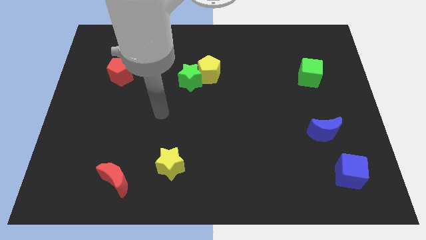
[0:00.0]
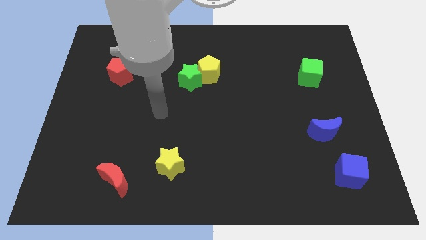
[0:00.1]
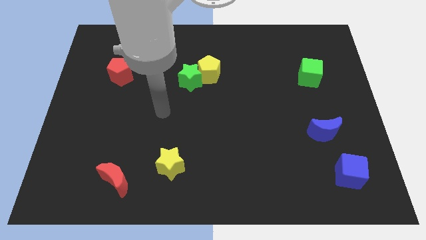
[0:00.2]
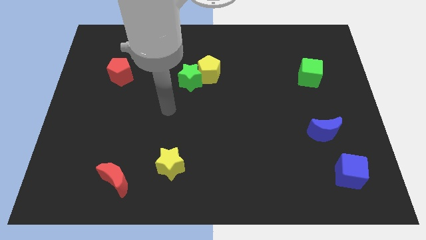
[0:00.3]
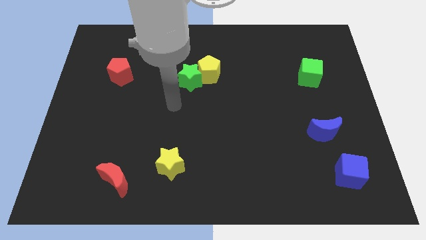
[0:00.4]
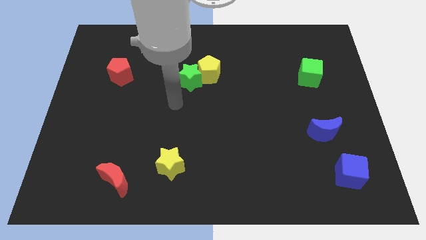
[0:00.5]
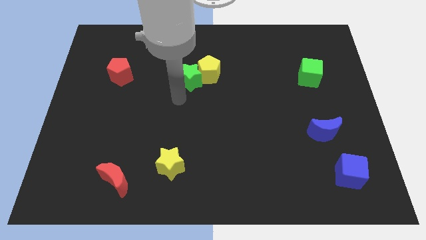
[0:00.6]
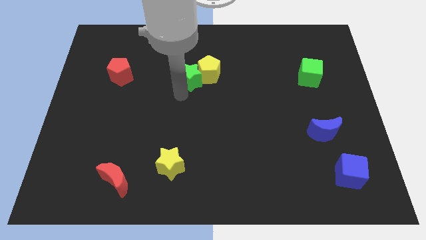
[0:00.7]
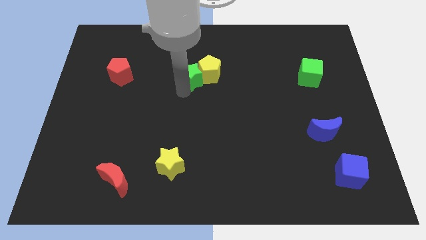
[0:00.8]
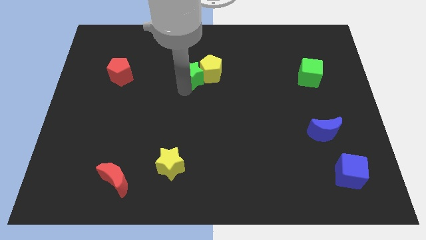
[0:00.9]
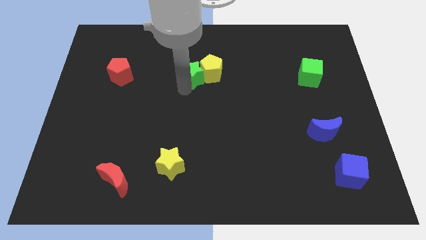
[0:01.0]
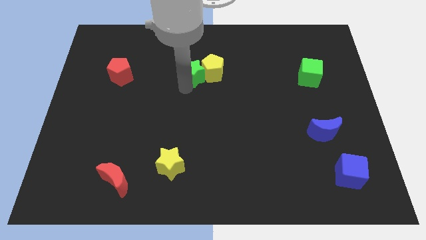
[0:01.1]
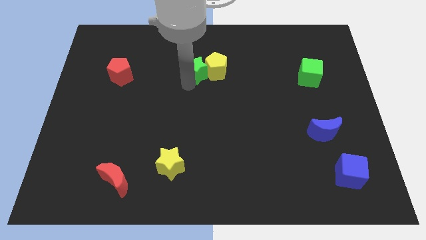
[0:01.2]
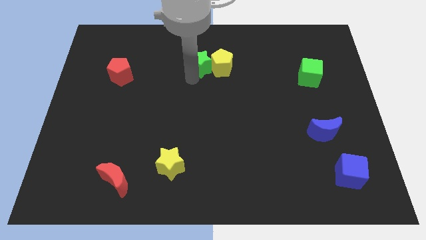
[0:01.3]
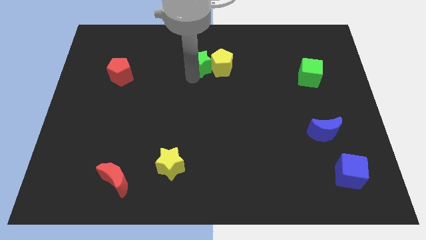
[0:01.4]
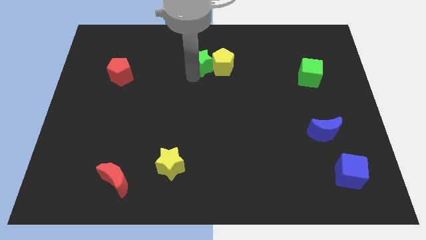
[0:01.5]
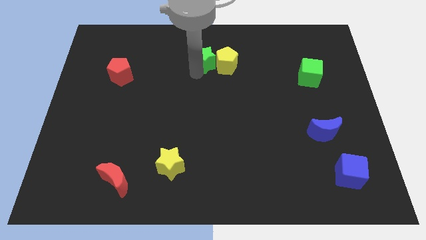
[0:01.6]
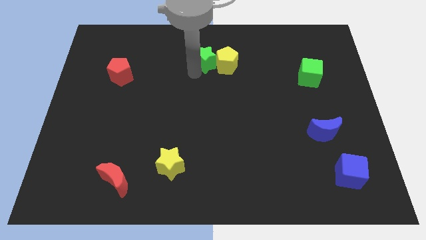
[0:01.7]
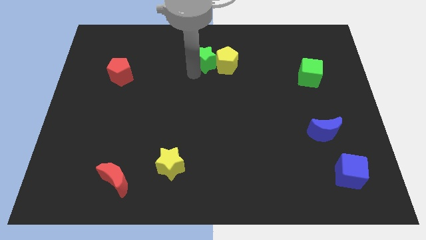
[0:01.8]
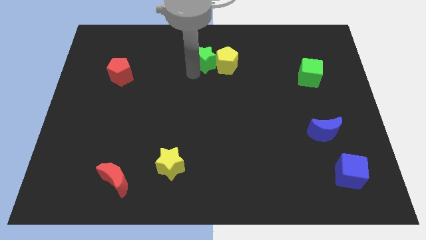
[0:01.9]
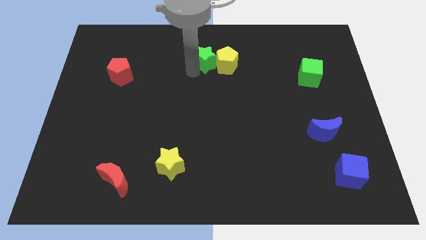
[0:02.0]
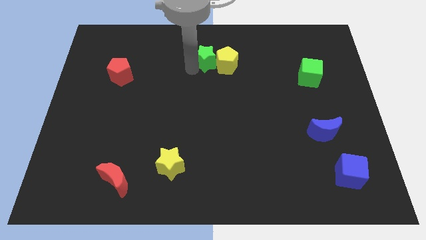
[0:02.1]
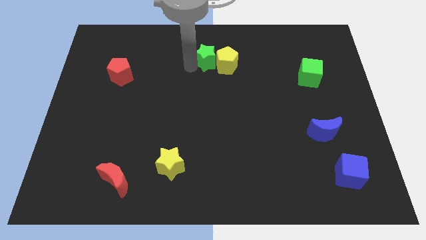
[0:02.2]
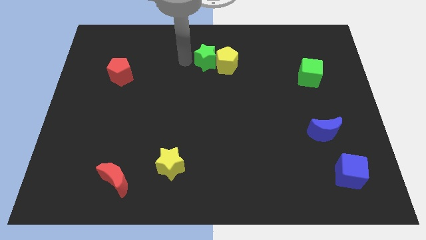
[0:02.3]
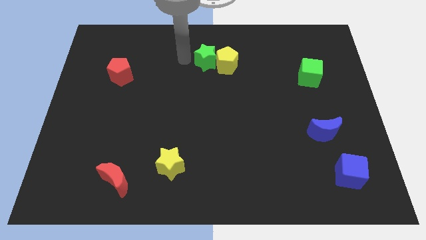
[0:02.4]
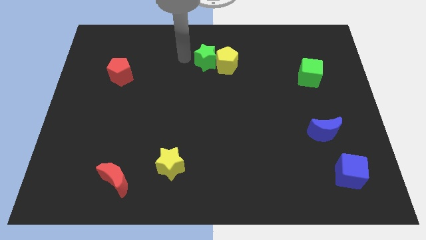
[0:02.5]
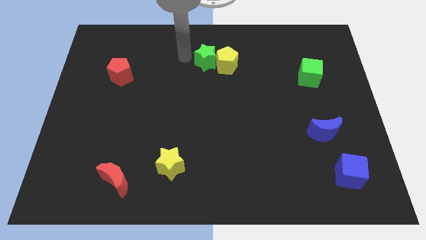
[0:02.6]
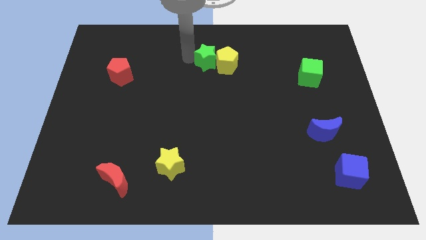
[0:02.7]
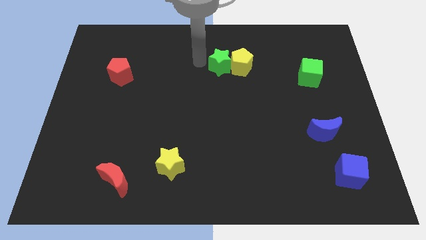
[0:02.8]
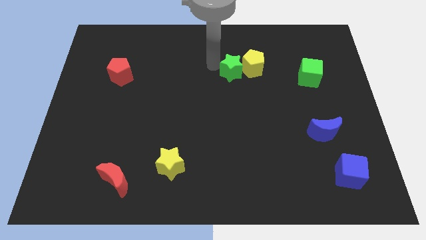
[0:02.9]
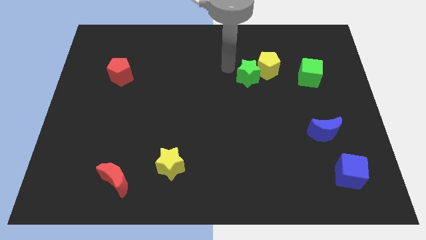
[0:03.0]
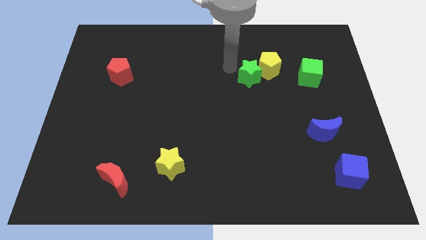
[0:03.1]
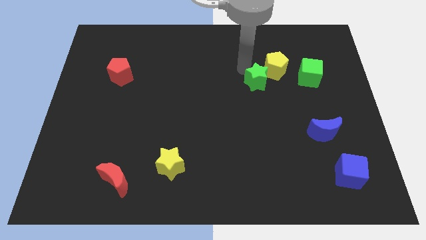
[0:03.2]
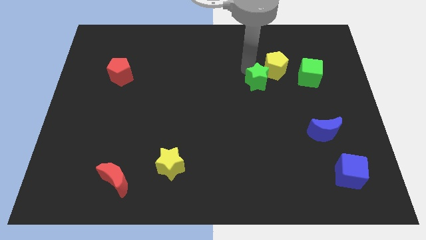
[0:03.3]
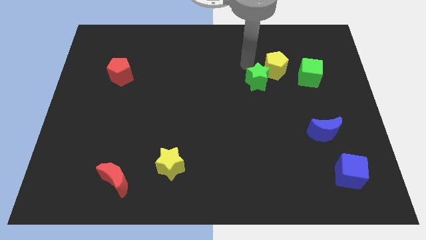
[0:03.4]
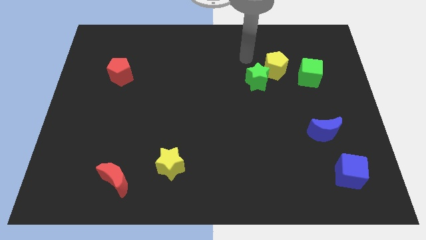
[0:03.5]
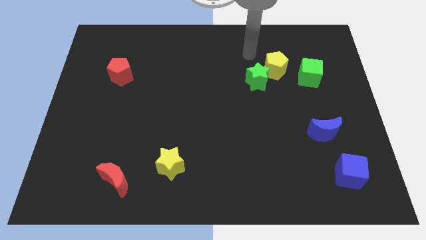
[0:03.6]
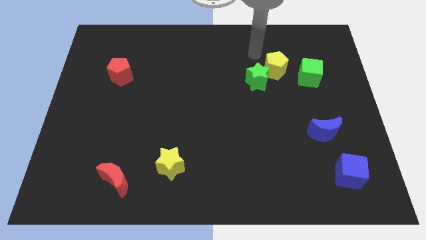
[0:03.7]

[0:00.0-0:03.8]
push the yellow pentagon and green star to the left of the green cube

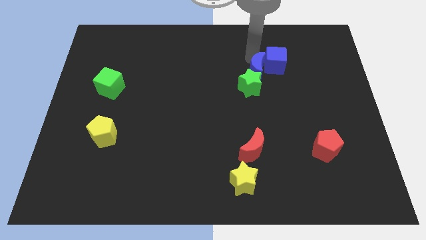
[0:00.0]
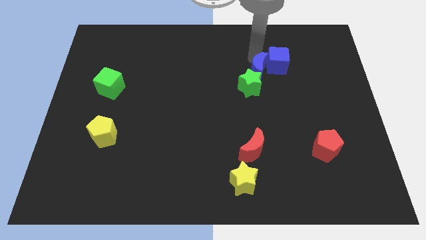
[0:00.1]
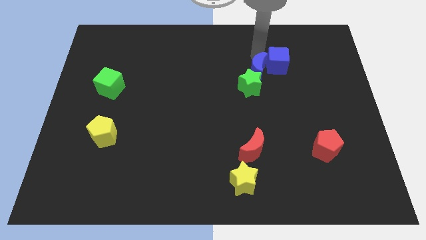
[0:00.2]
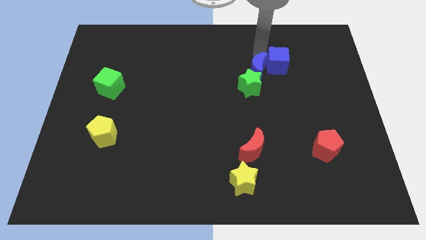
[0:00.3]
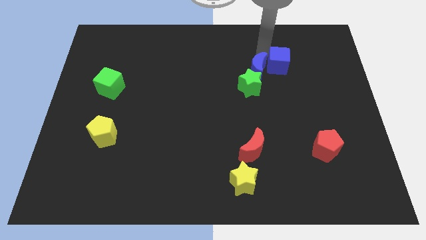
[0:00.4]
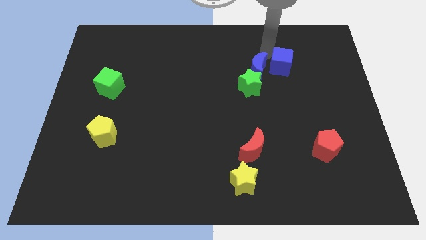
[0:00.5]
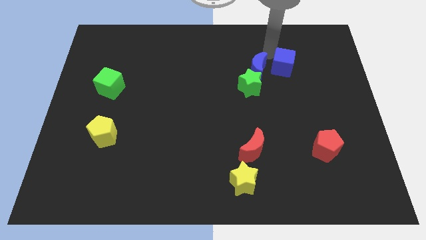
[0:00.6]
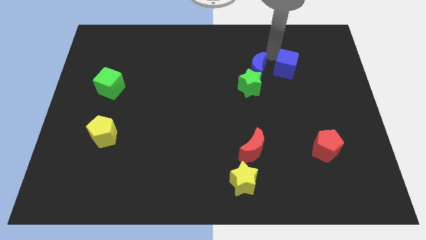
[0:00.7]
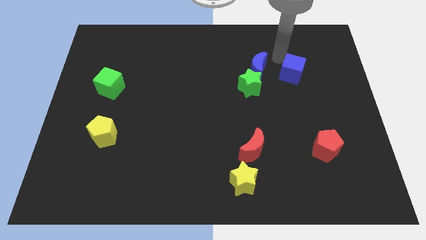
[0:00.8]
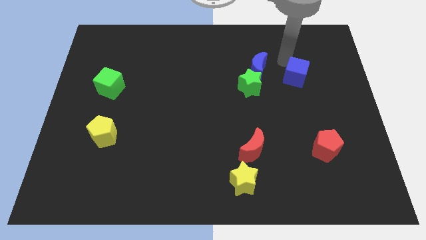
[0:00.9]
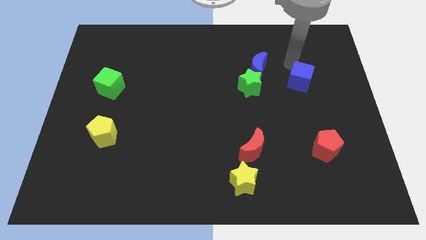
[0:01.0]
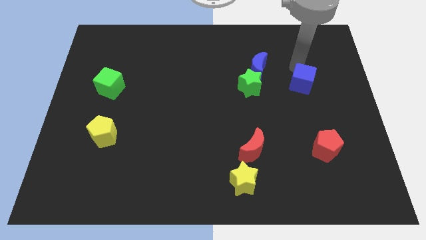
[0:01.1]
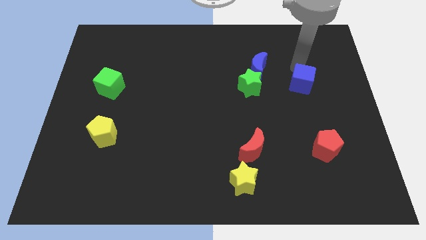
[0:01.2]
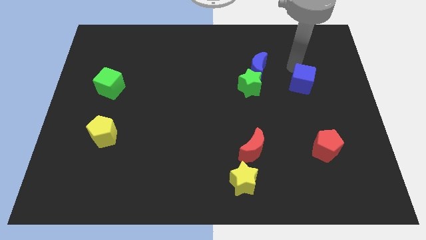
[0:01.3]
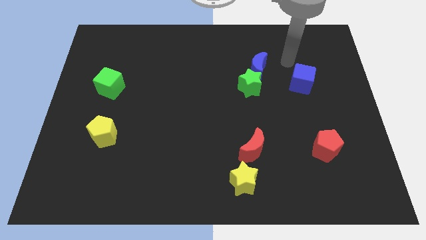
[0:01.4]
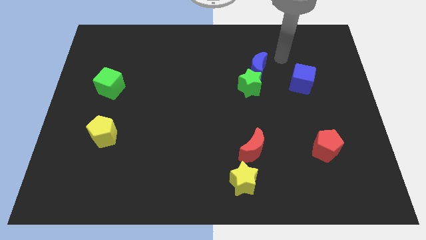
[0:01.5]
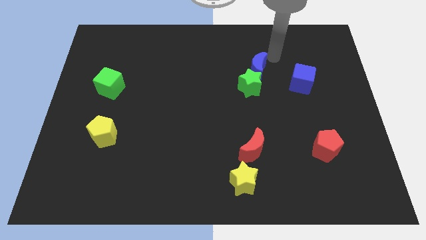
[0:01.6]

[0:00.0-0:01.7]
separate the blue cube from the blue crescent

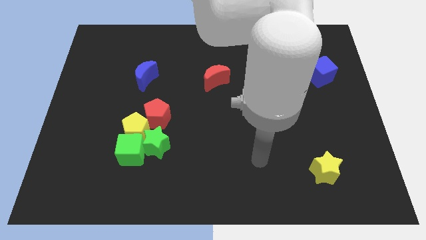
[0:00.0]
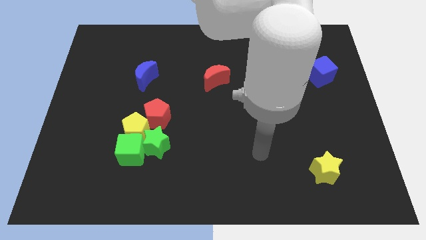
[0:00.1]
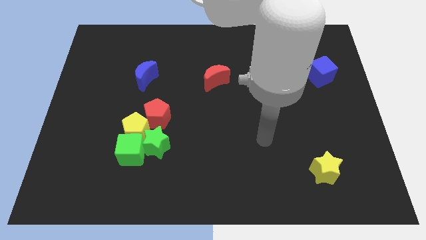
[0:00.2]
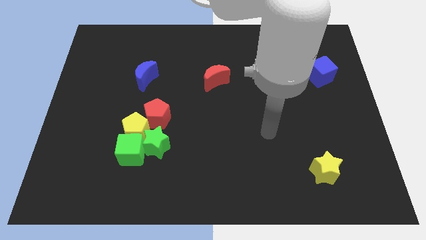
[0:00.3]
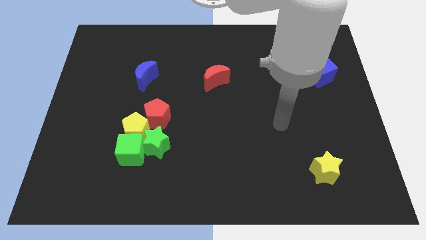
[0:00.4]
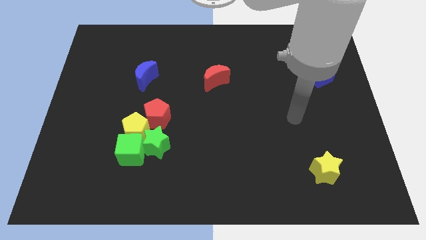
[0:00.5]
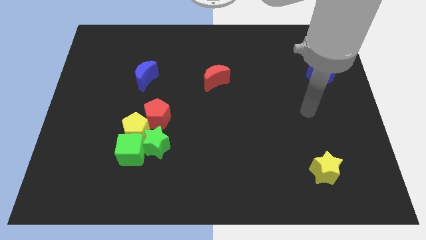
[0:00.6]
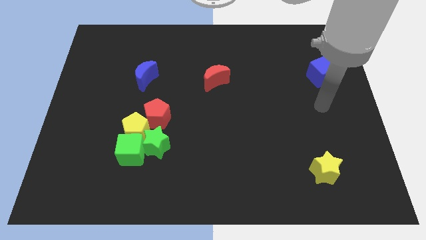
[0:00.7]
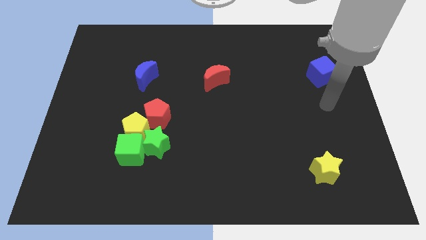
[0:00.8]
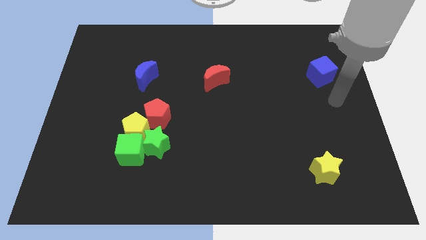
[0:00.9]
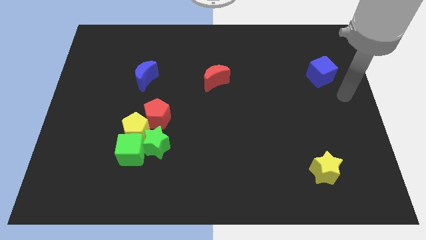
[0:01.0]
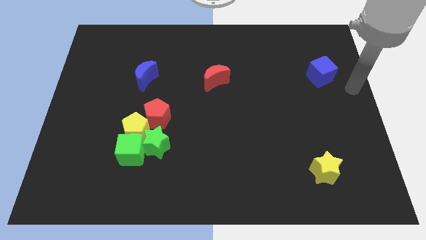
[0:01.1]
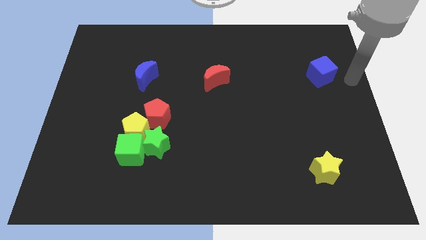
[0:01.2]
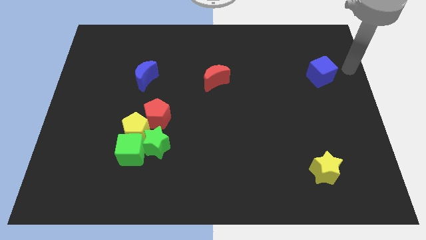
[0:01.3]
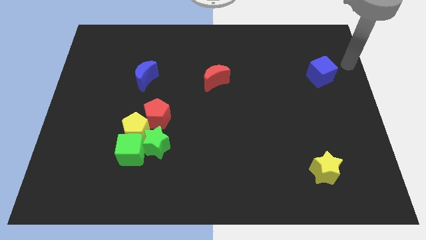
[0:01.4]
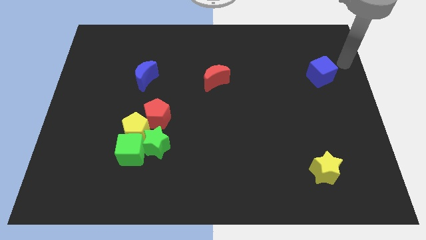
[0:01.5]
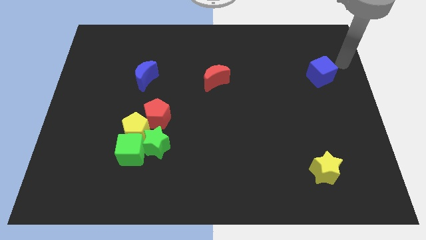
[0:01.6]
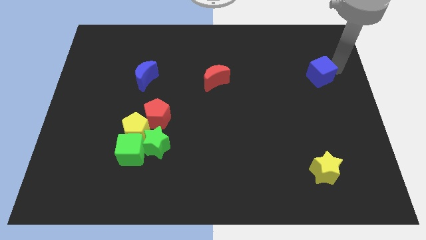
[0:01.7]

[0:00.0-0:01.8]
move your arm towards the blue cube

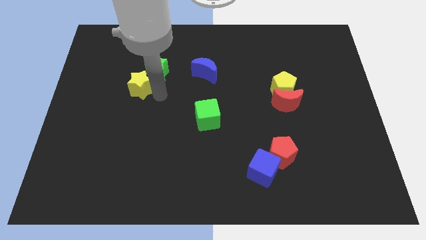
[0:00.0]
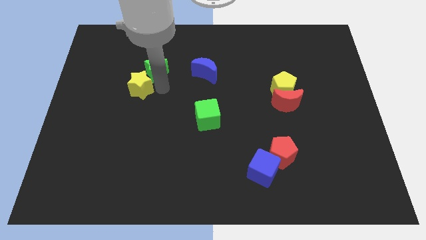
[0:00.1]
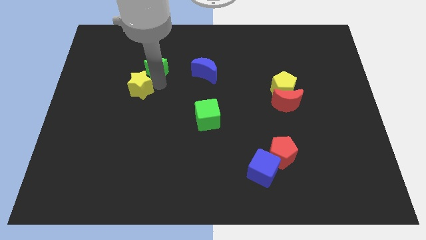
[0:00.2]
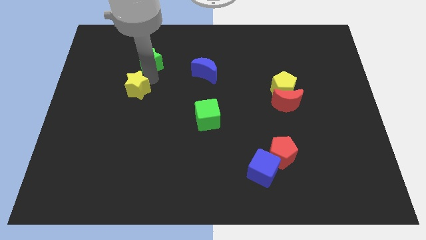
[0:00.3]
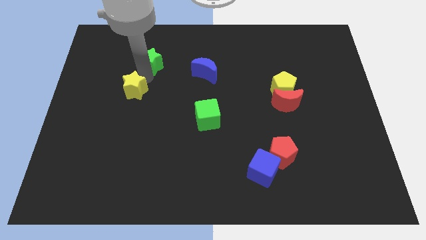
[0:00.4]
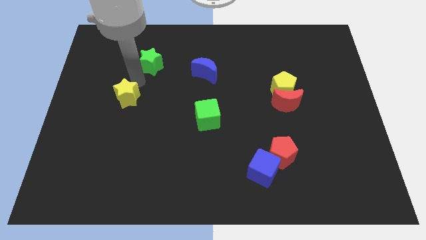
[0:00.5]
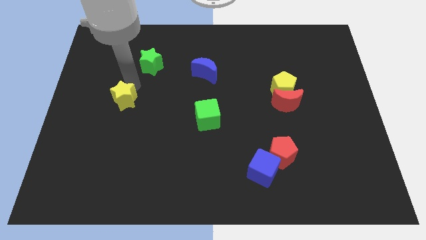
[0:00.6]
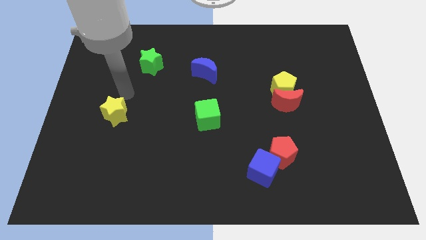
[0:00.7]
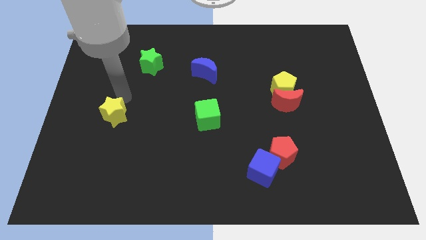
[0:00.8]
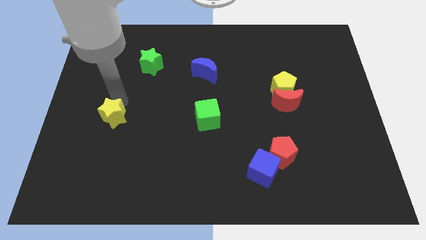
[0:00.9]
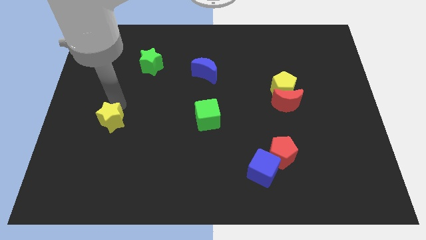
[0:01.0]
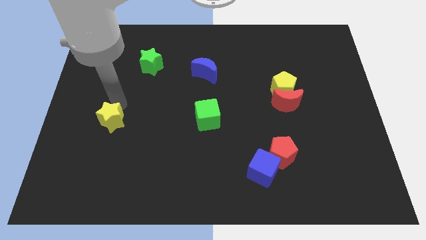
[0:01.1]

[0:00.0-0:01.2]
put the yellow star to the left of the green cube

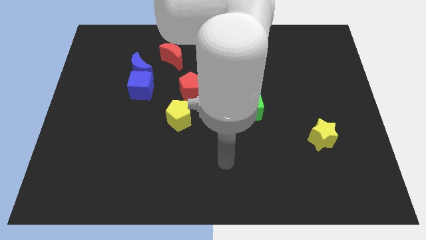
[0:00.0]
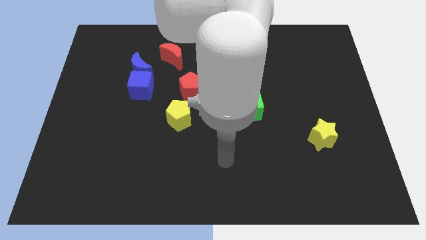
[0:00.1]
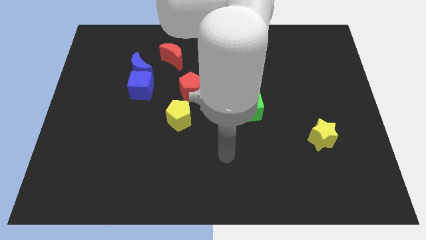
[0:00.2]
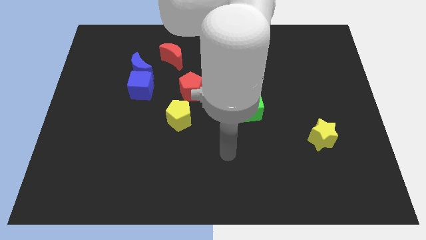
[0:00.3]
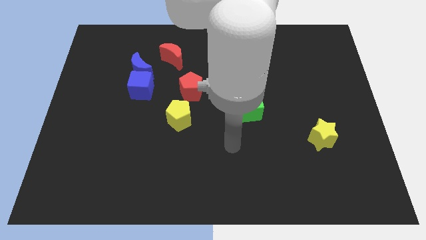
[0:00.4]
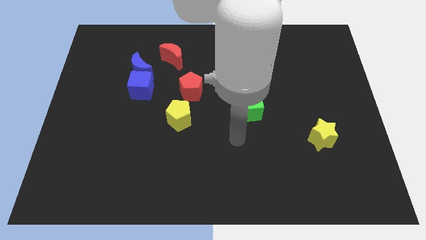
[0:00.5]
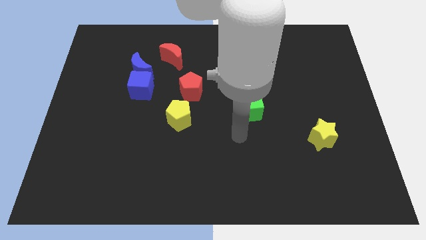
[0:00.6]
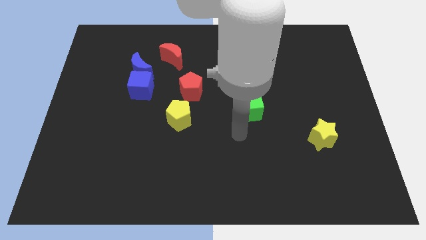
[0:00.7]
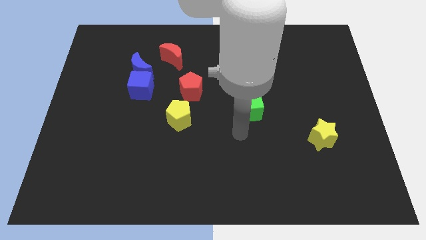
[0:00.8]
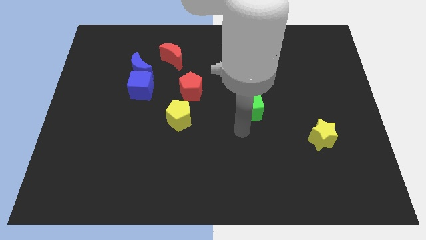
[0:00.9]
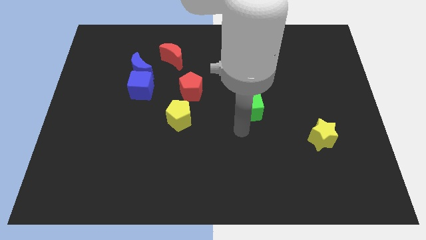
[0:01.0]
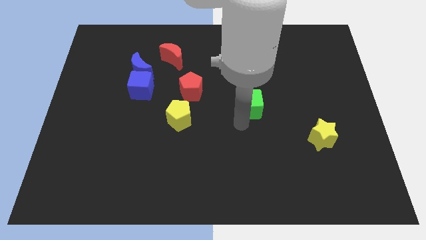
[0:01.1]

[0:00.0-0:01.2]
touch the bottom of green cube
